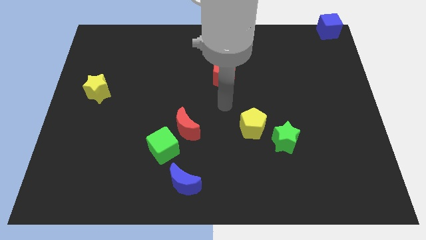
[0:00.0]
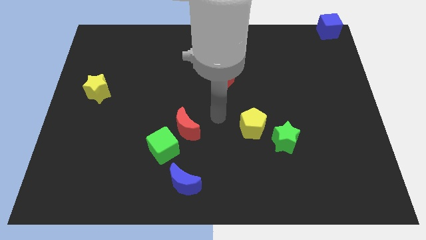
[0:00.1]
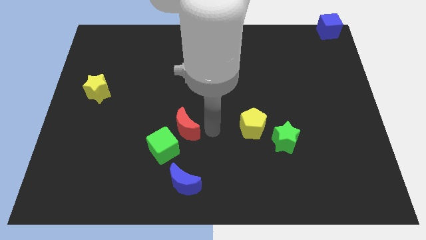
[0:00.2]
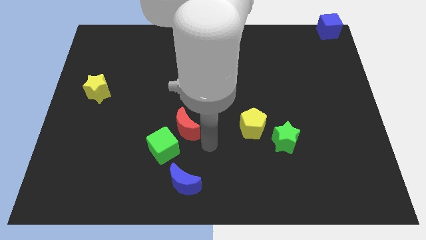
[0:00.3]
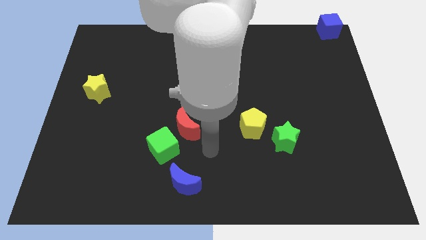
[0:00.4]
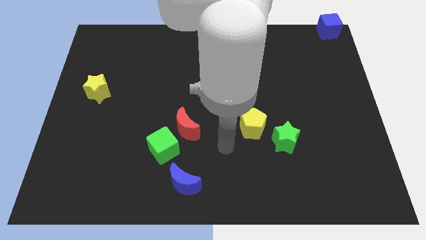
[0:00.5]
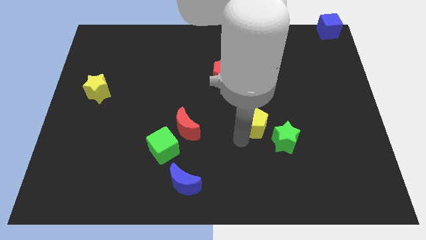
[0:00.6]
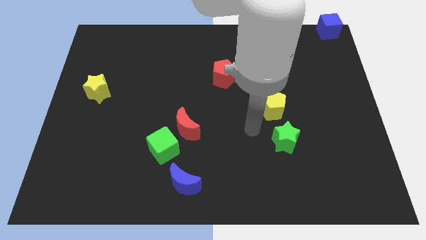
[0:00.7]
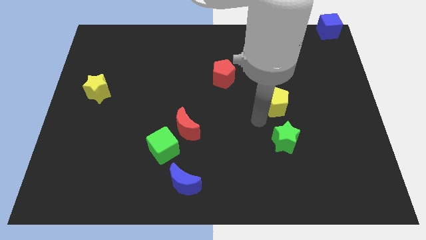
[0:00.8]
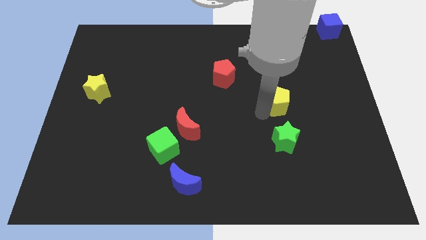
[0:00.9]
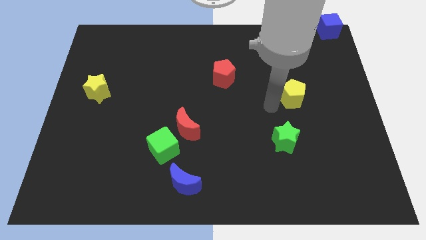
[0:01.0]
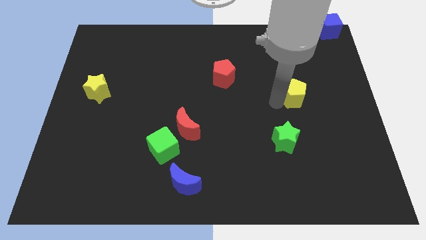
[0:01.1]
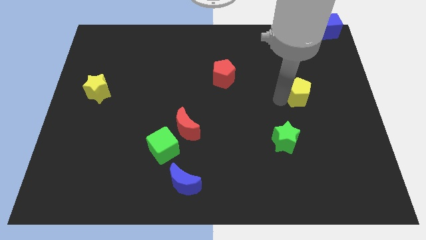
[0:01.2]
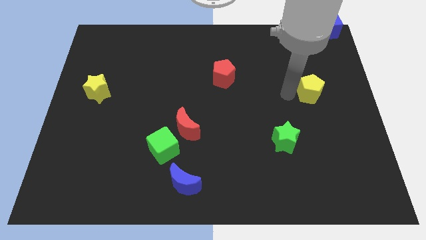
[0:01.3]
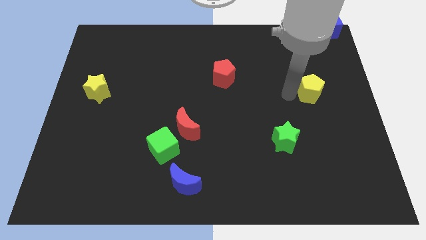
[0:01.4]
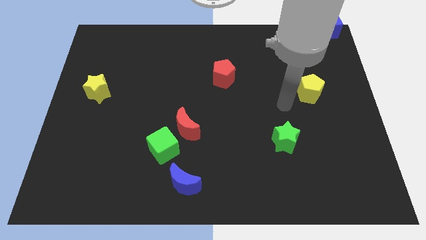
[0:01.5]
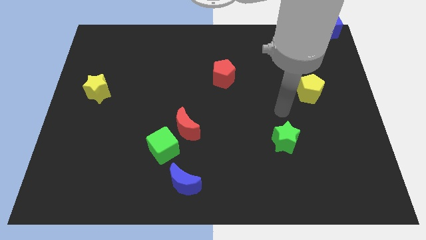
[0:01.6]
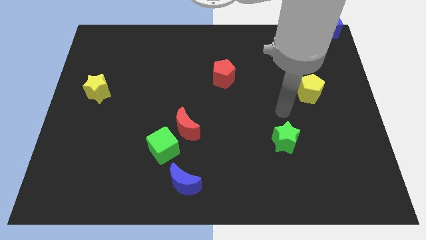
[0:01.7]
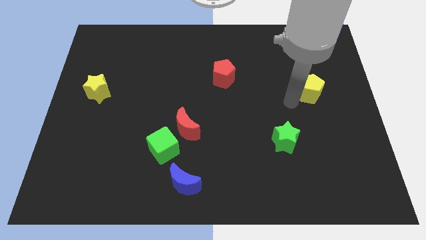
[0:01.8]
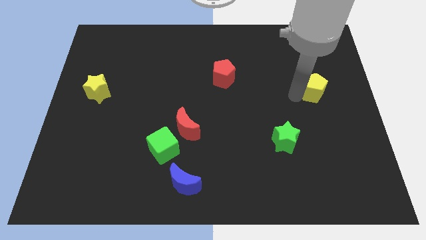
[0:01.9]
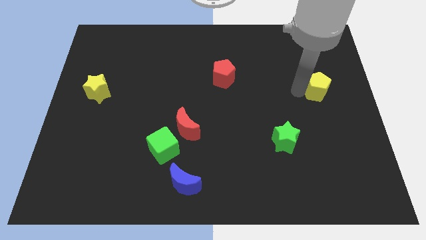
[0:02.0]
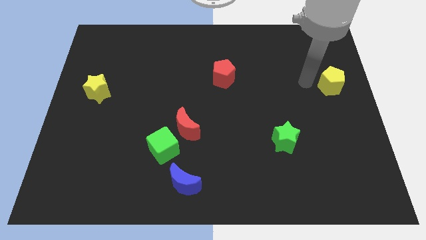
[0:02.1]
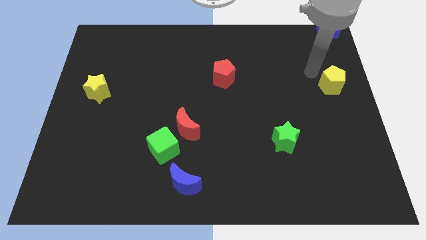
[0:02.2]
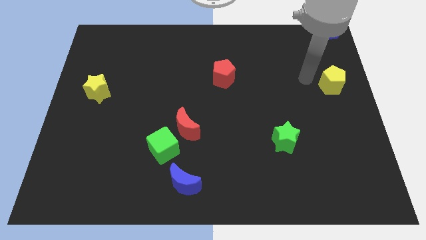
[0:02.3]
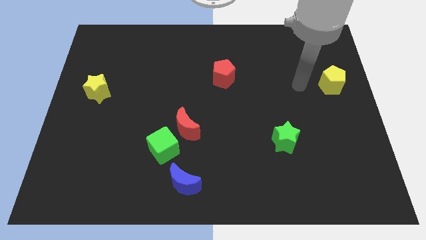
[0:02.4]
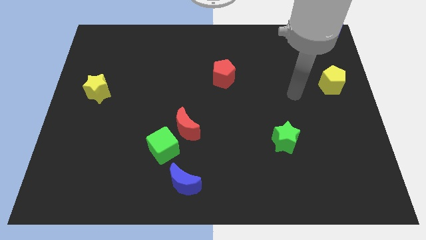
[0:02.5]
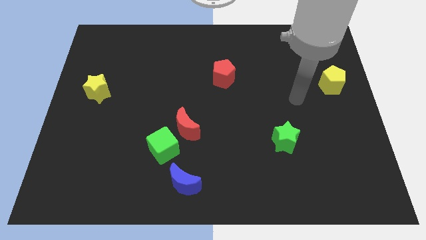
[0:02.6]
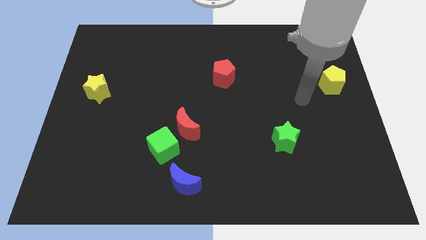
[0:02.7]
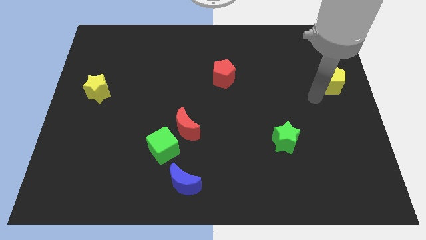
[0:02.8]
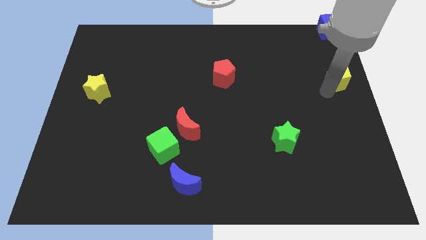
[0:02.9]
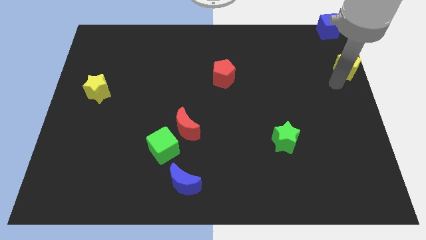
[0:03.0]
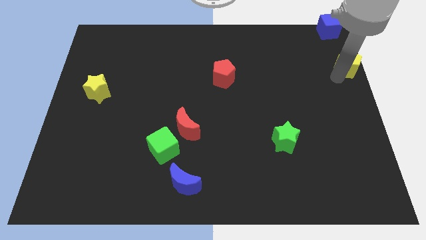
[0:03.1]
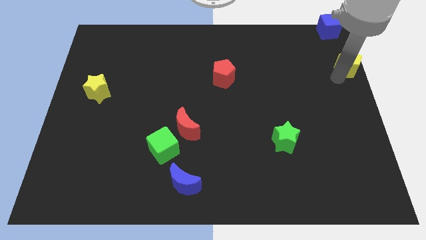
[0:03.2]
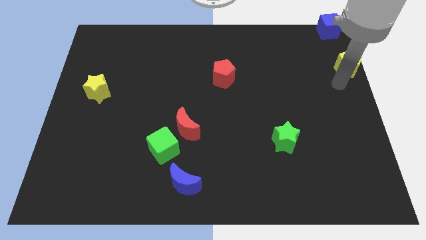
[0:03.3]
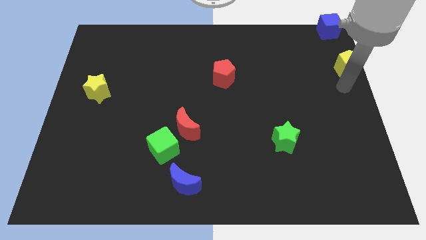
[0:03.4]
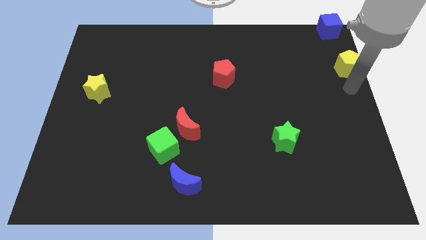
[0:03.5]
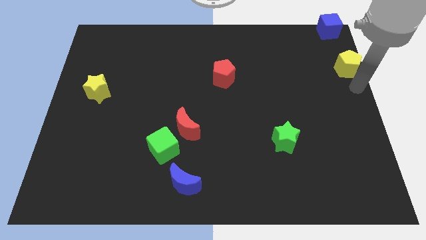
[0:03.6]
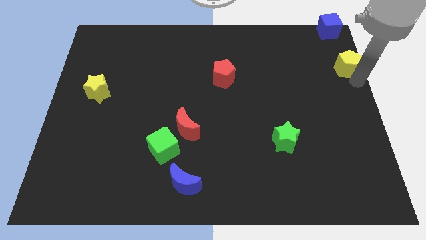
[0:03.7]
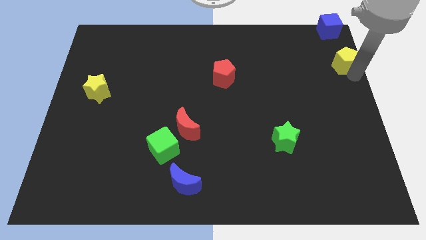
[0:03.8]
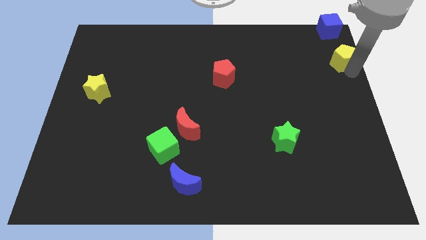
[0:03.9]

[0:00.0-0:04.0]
place the yellow pentagon below the blue cube

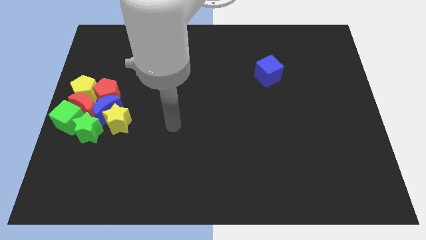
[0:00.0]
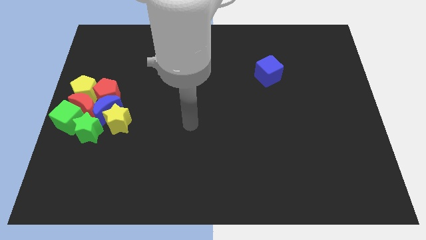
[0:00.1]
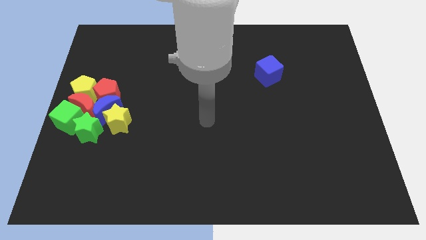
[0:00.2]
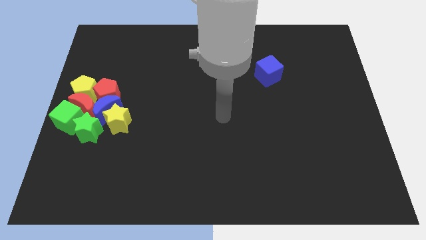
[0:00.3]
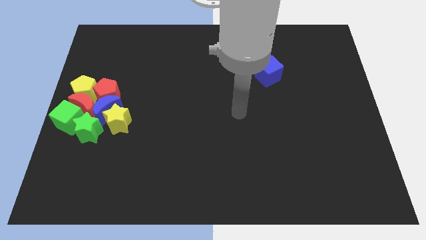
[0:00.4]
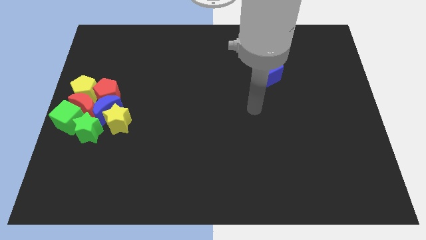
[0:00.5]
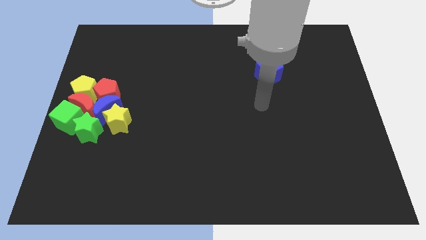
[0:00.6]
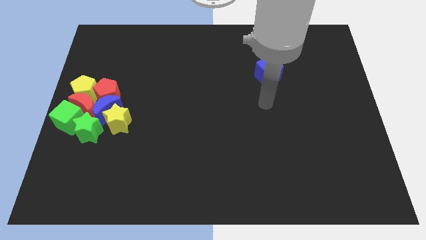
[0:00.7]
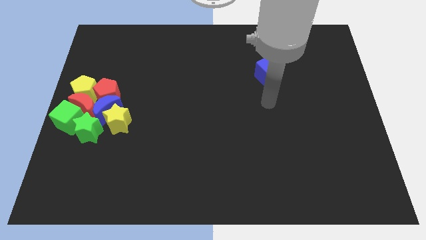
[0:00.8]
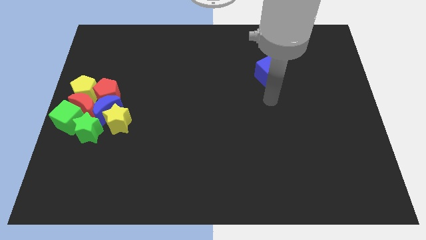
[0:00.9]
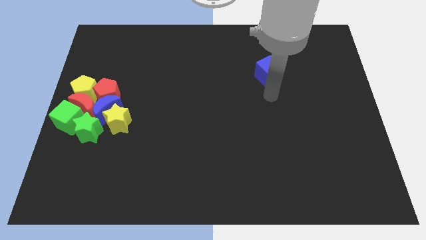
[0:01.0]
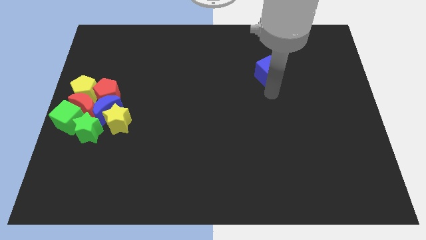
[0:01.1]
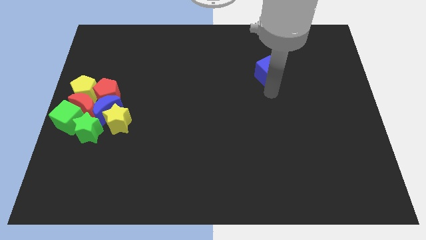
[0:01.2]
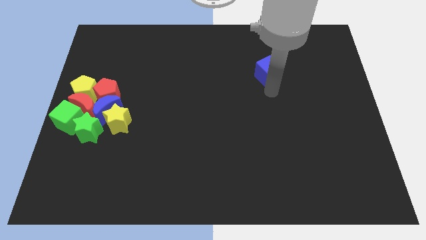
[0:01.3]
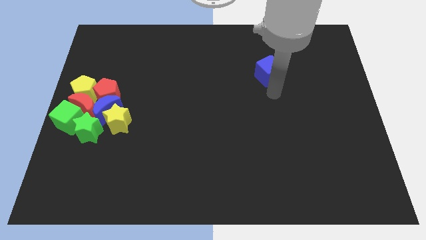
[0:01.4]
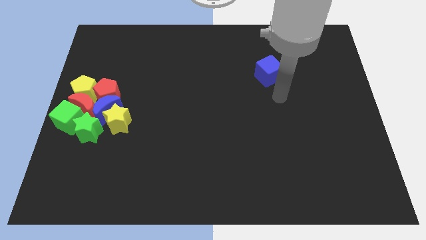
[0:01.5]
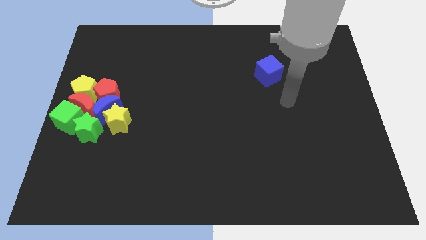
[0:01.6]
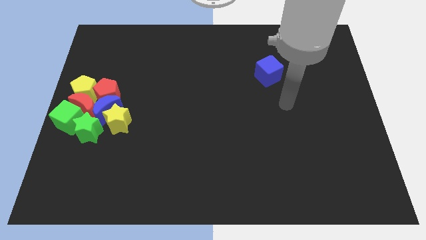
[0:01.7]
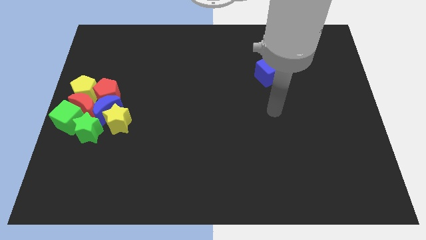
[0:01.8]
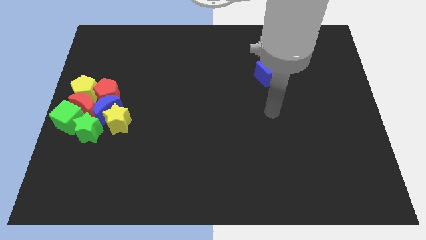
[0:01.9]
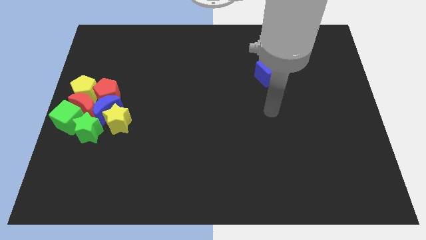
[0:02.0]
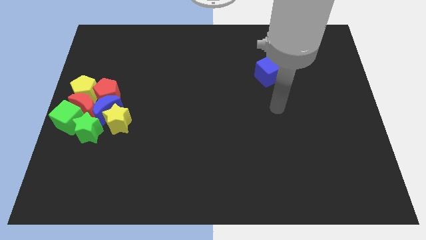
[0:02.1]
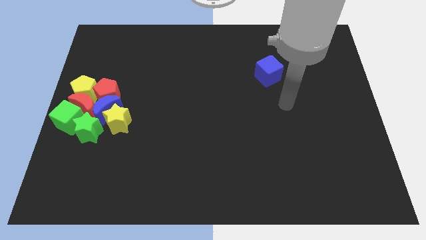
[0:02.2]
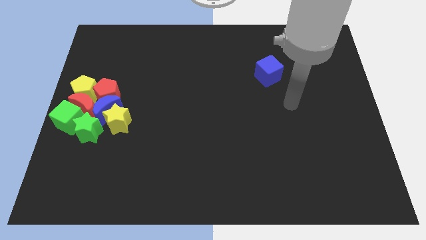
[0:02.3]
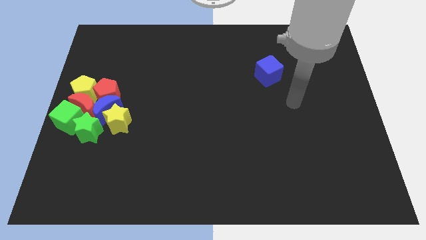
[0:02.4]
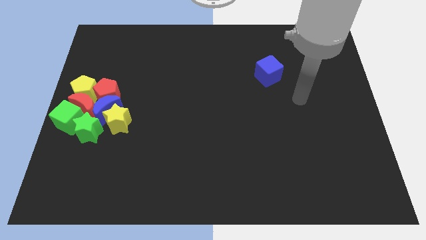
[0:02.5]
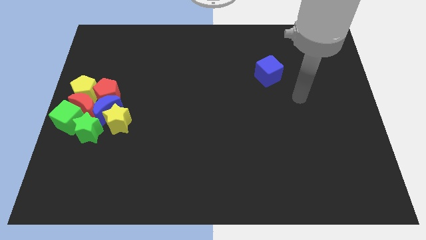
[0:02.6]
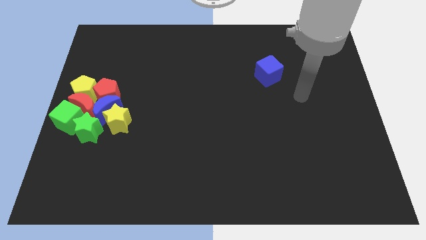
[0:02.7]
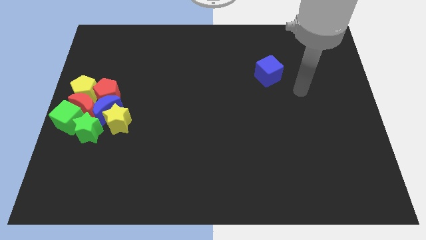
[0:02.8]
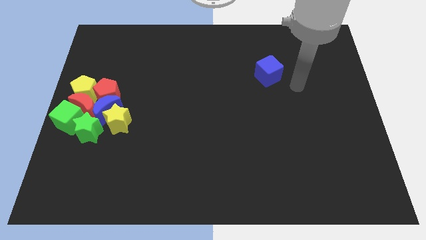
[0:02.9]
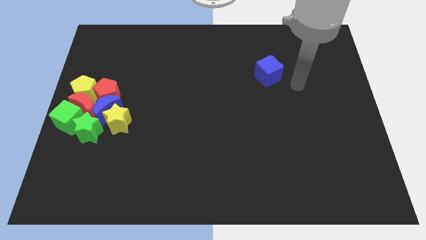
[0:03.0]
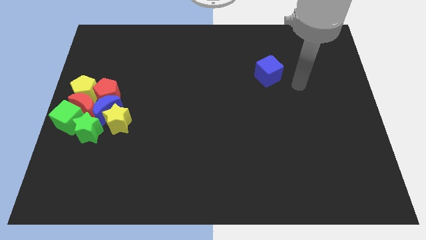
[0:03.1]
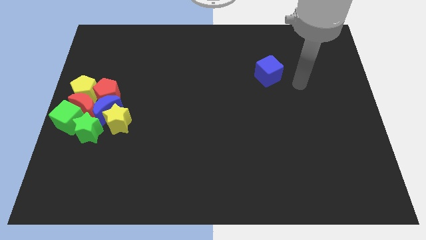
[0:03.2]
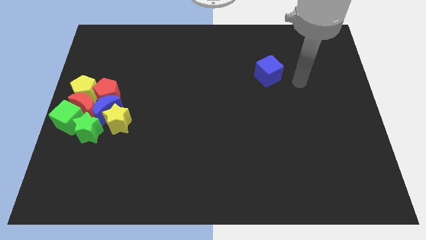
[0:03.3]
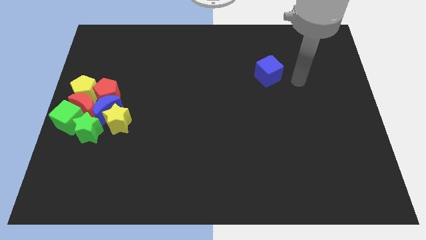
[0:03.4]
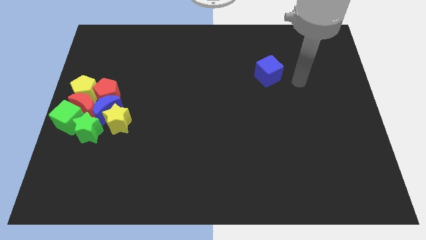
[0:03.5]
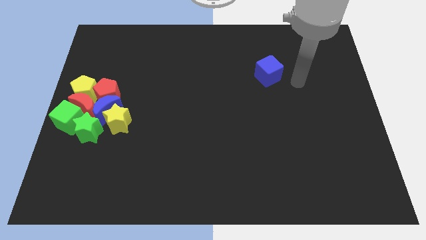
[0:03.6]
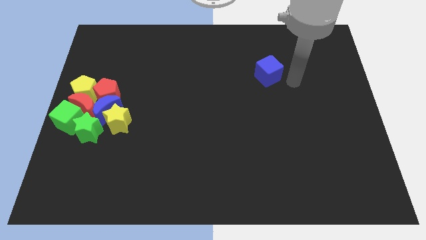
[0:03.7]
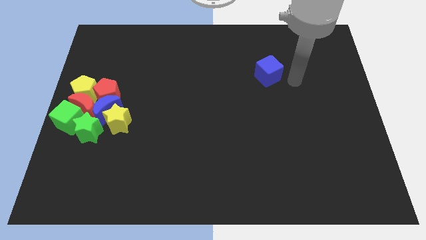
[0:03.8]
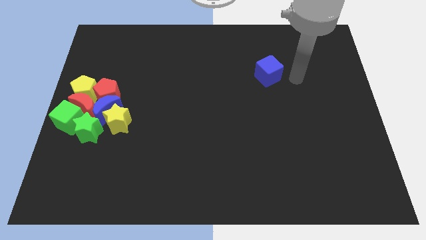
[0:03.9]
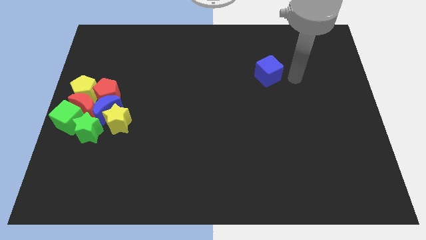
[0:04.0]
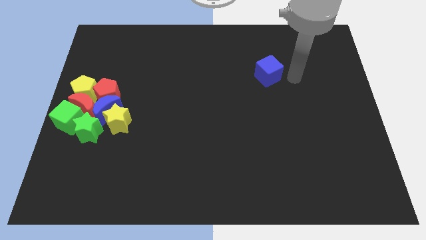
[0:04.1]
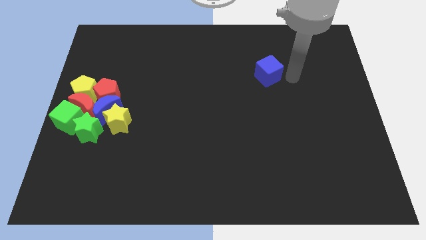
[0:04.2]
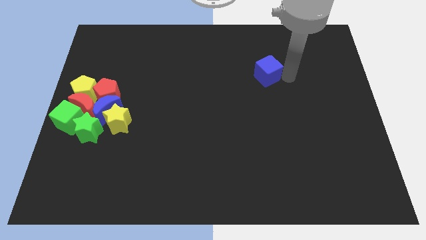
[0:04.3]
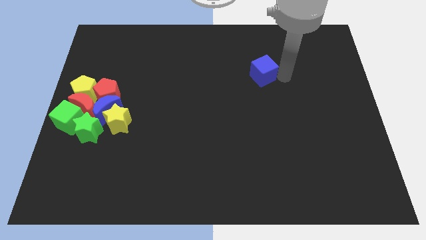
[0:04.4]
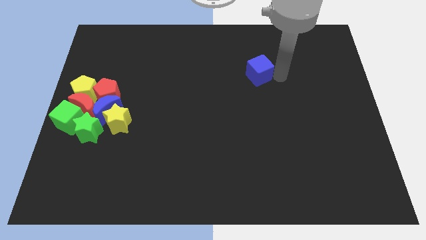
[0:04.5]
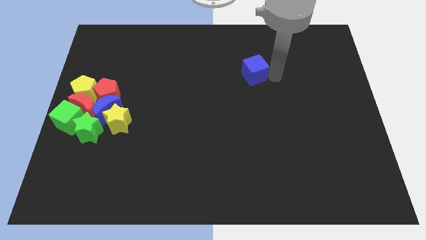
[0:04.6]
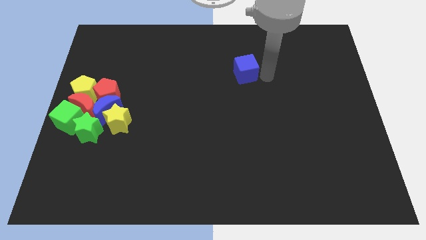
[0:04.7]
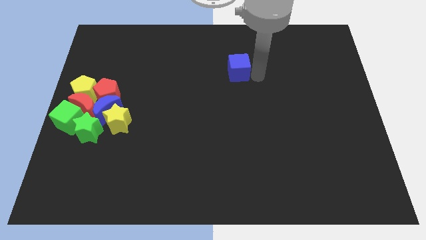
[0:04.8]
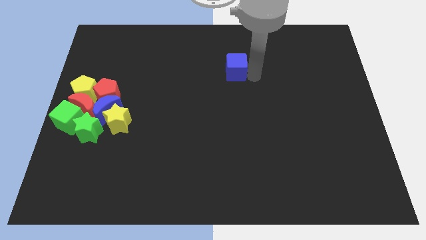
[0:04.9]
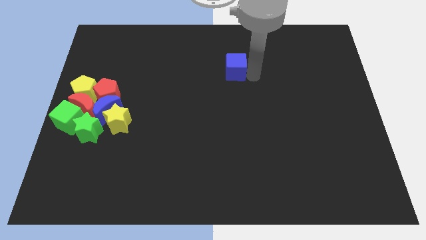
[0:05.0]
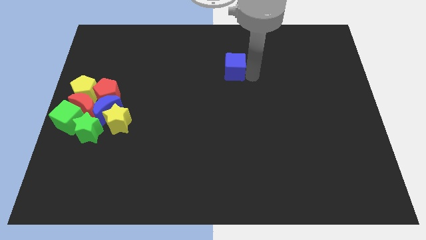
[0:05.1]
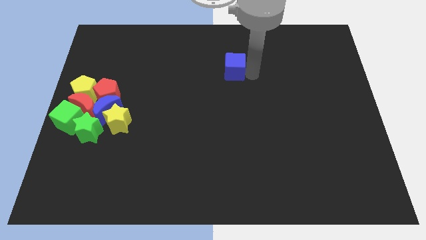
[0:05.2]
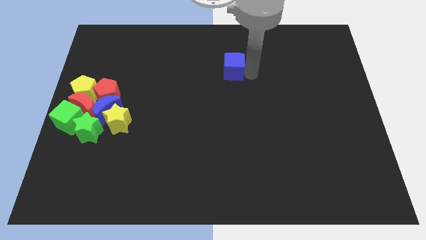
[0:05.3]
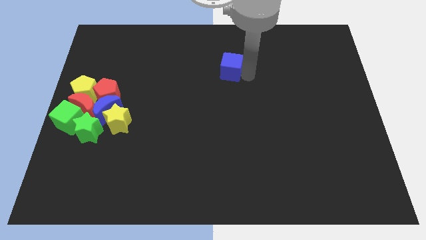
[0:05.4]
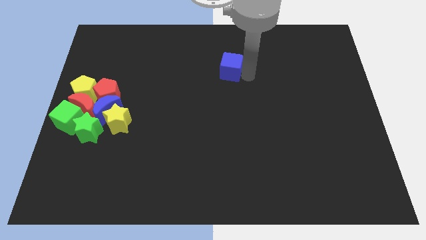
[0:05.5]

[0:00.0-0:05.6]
slightly push the blue cube to the left
